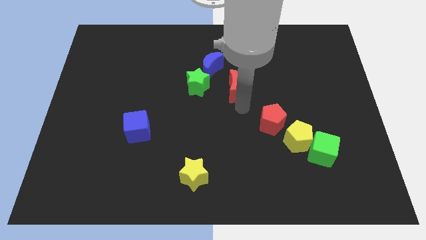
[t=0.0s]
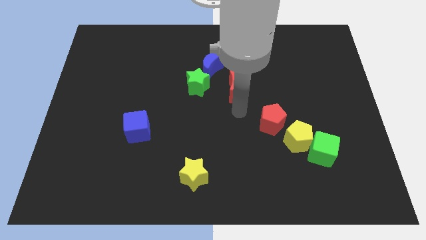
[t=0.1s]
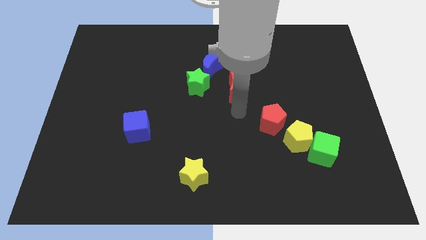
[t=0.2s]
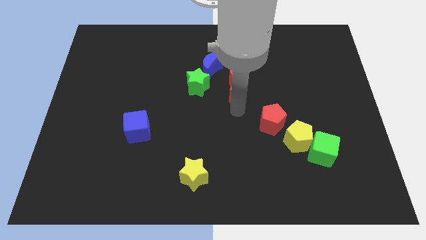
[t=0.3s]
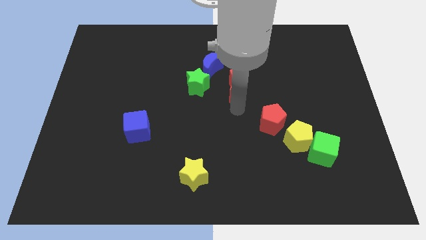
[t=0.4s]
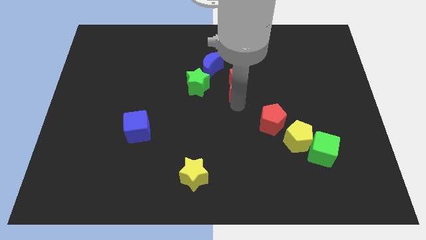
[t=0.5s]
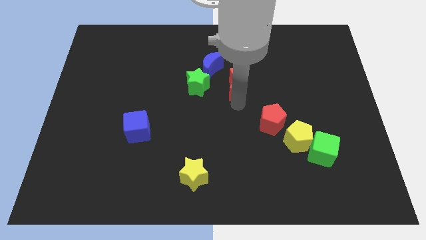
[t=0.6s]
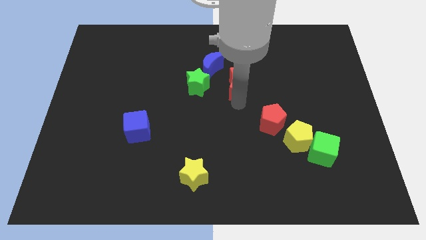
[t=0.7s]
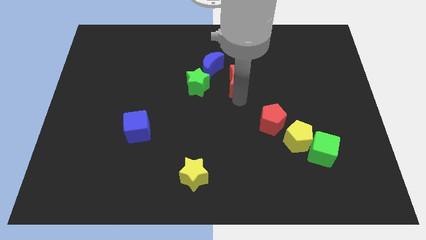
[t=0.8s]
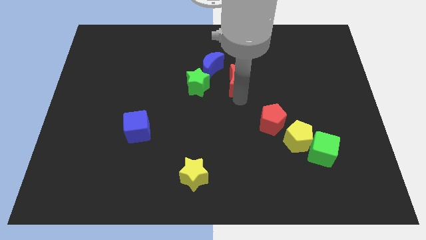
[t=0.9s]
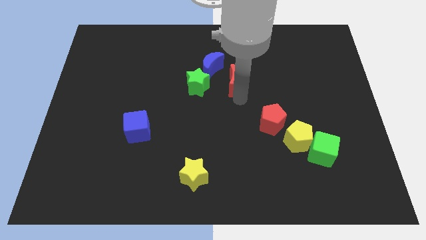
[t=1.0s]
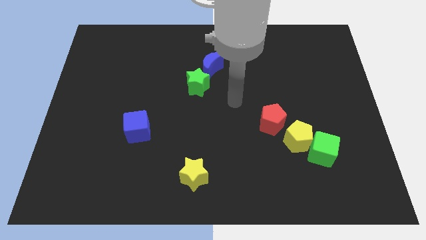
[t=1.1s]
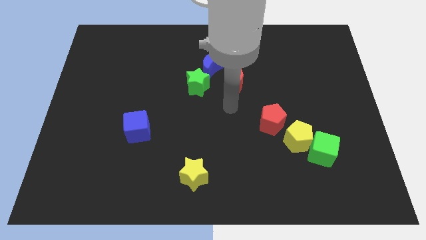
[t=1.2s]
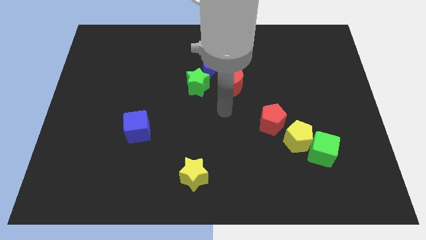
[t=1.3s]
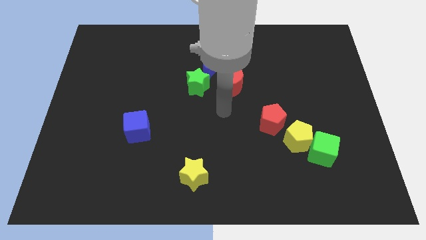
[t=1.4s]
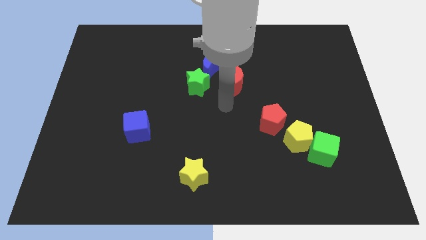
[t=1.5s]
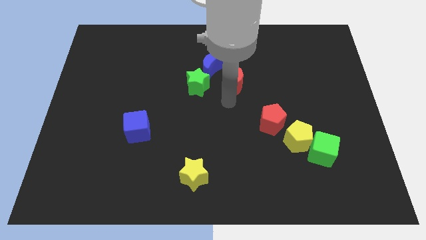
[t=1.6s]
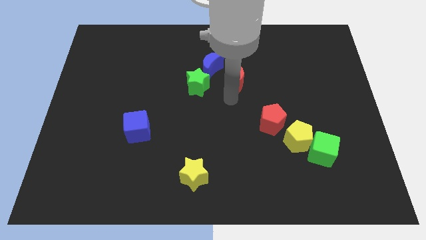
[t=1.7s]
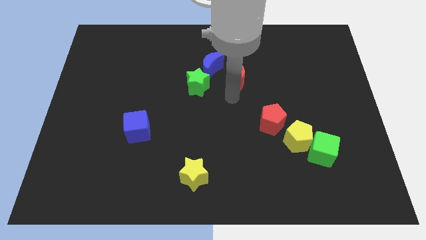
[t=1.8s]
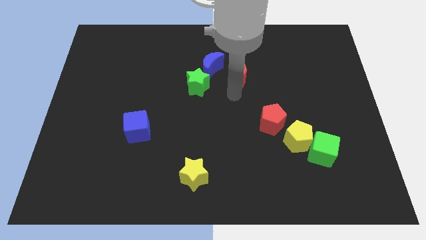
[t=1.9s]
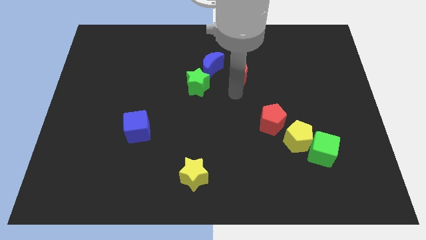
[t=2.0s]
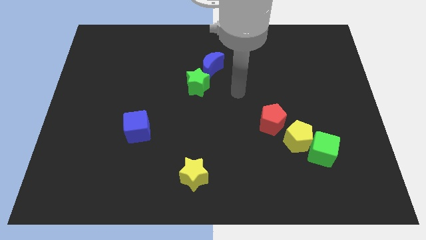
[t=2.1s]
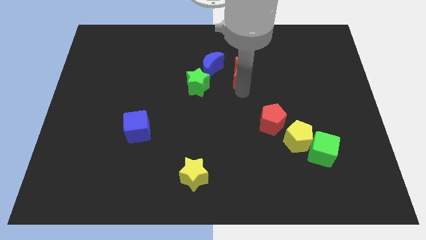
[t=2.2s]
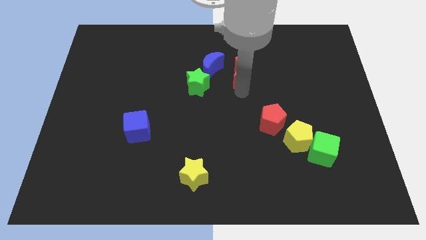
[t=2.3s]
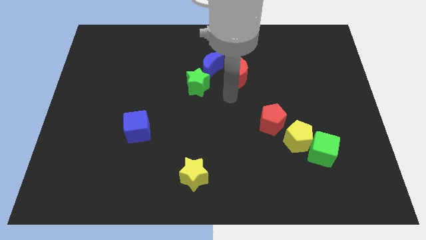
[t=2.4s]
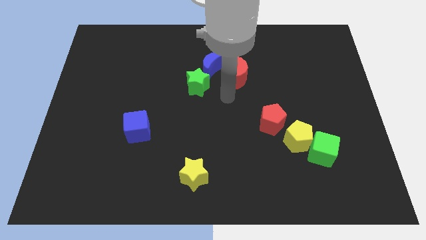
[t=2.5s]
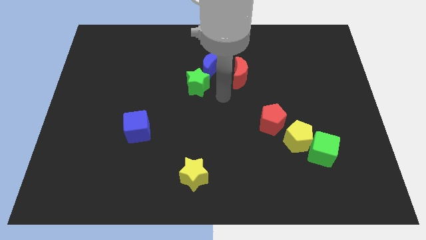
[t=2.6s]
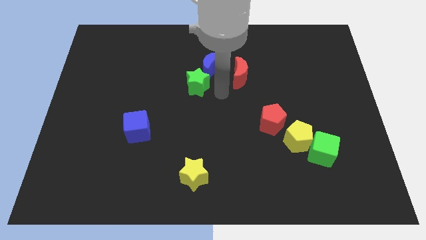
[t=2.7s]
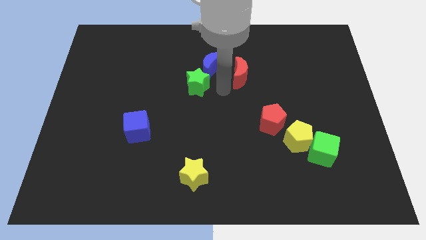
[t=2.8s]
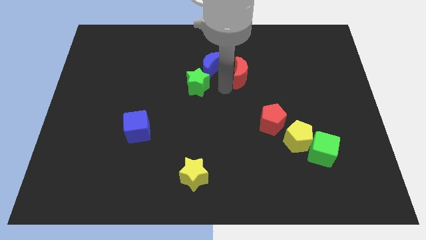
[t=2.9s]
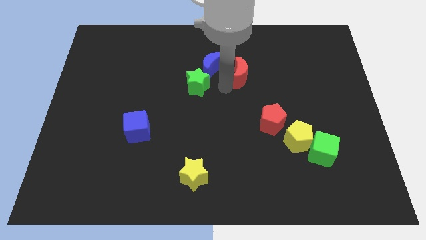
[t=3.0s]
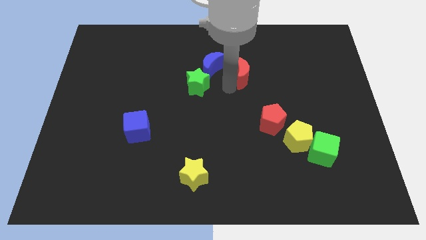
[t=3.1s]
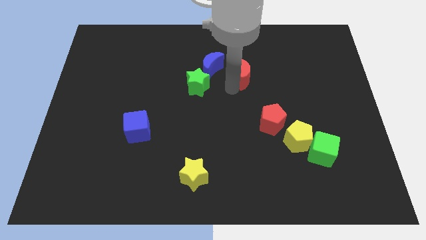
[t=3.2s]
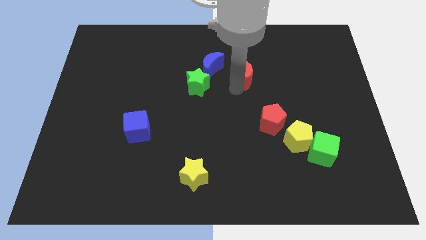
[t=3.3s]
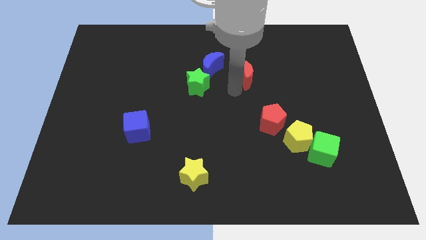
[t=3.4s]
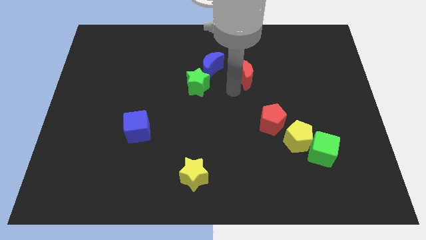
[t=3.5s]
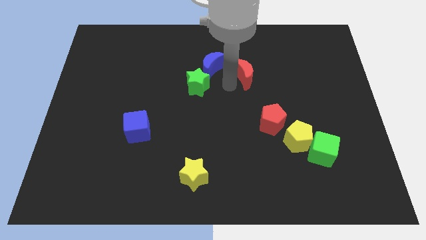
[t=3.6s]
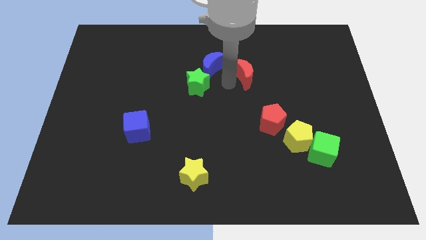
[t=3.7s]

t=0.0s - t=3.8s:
adjust the red moon at the right side of the blue moon

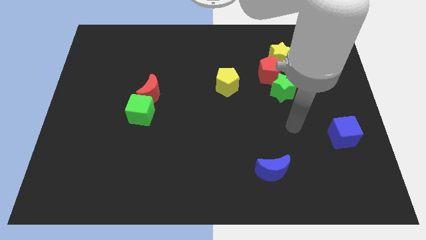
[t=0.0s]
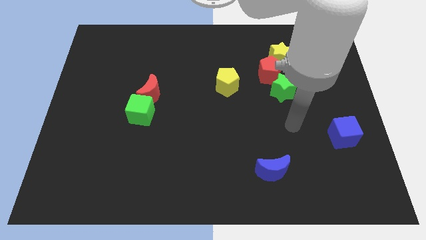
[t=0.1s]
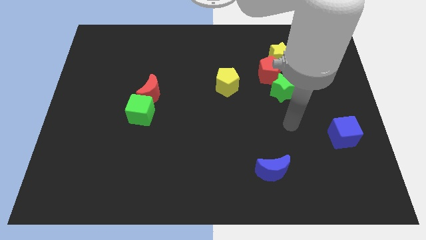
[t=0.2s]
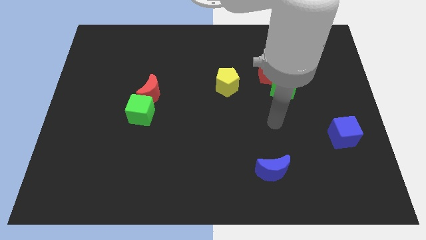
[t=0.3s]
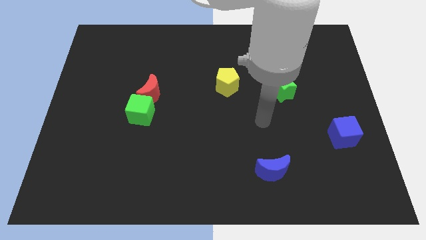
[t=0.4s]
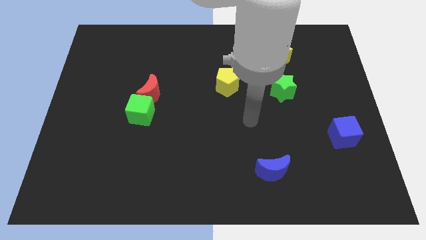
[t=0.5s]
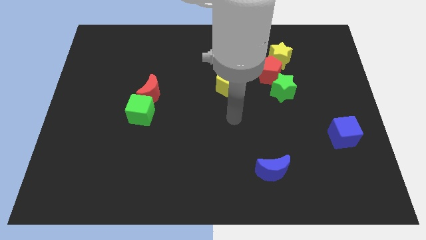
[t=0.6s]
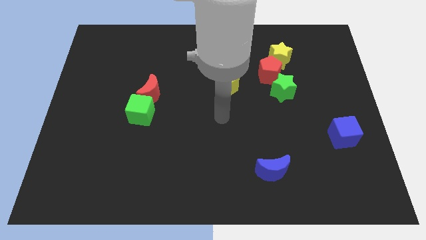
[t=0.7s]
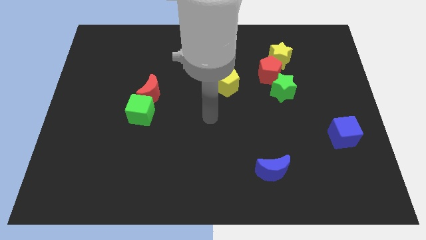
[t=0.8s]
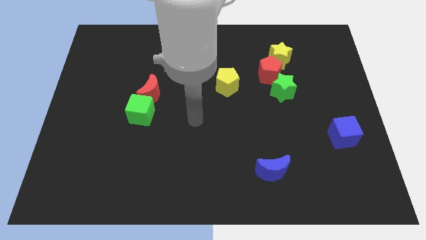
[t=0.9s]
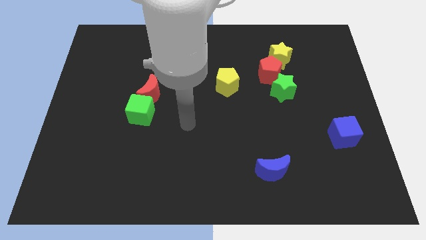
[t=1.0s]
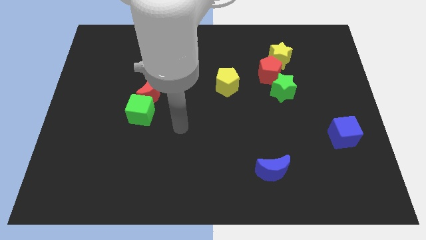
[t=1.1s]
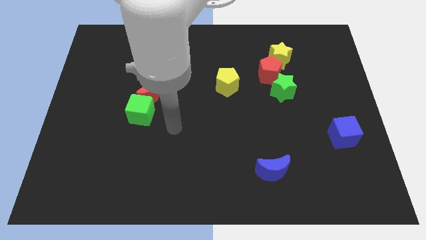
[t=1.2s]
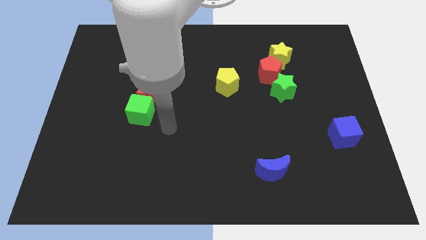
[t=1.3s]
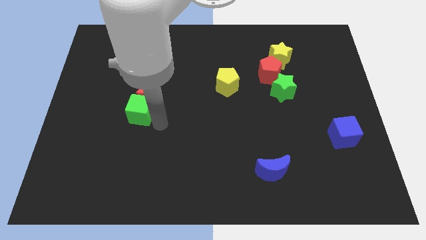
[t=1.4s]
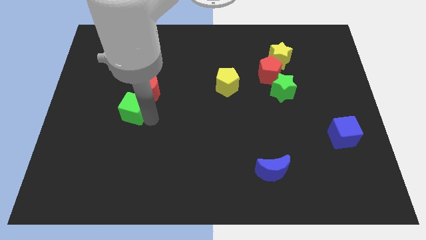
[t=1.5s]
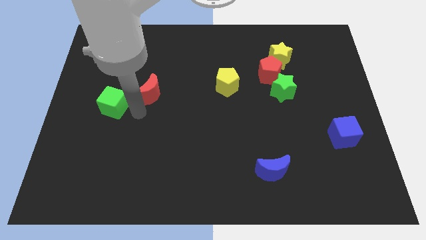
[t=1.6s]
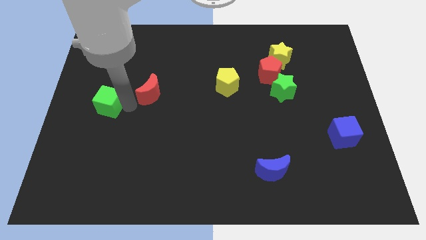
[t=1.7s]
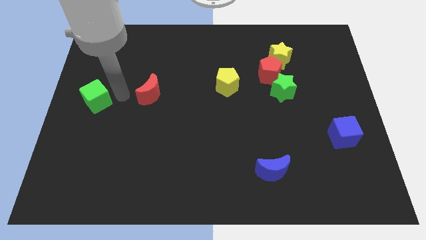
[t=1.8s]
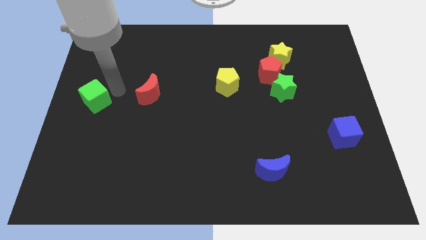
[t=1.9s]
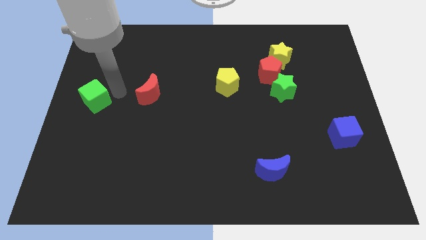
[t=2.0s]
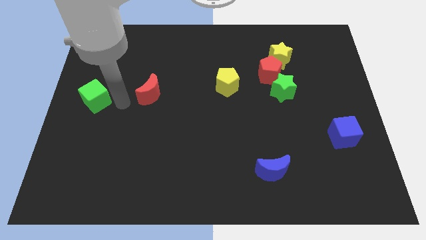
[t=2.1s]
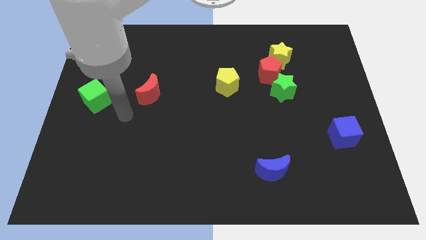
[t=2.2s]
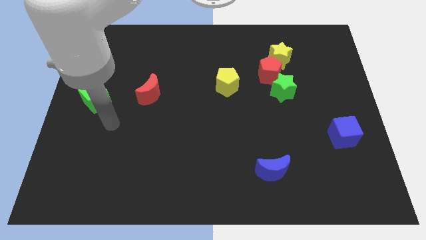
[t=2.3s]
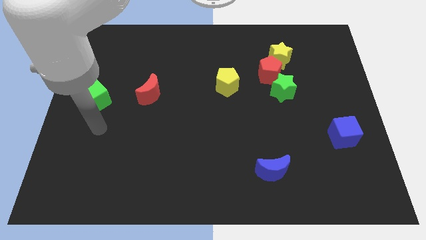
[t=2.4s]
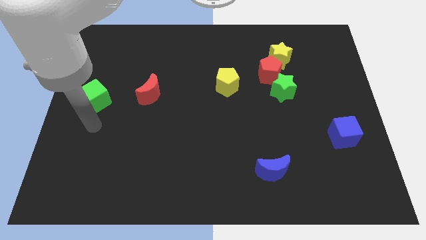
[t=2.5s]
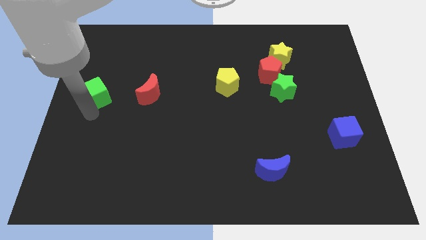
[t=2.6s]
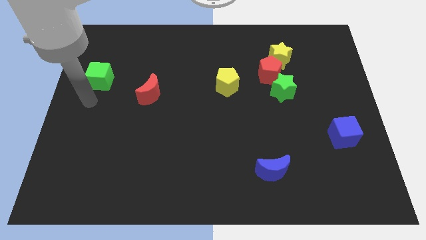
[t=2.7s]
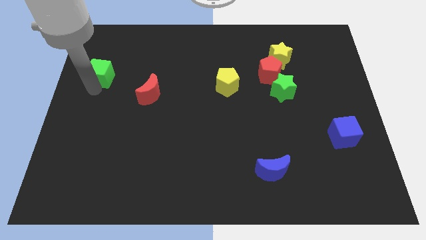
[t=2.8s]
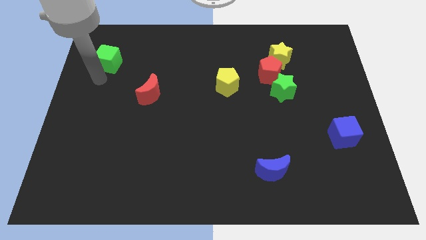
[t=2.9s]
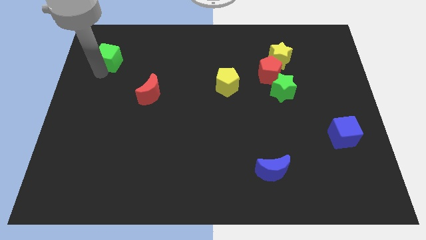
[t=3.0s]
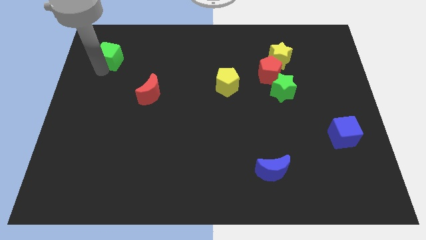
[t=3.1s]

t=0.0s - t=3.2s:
move the green cube to the top left side of the red crescent

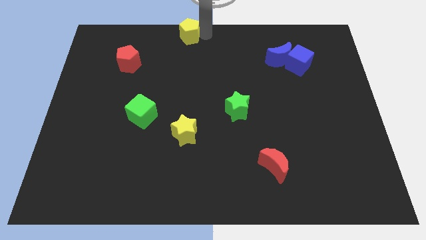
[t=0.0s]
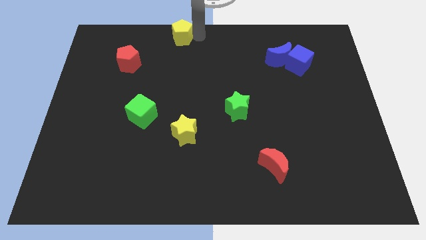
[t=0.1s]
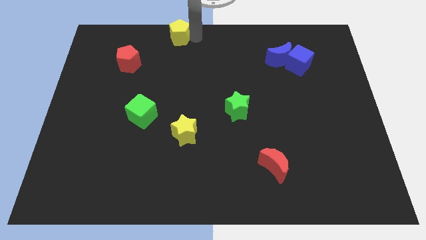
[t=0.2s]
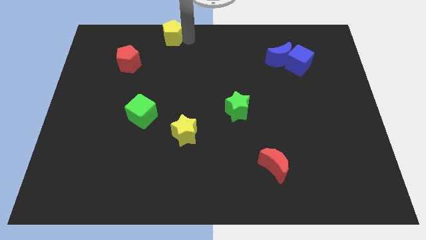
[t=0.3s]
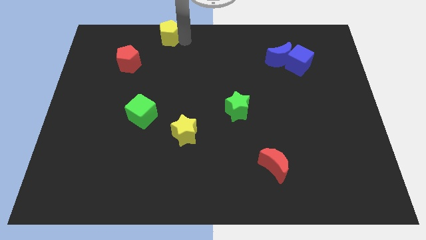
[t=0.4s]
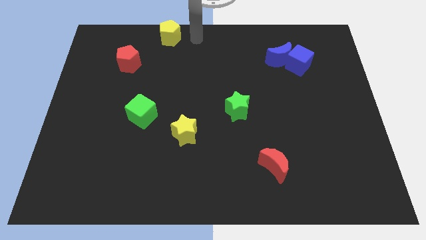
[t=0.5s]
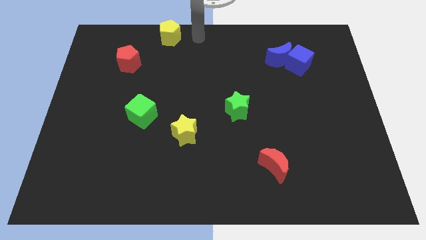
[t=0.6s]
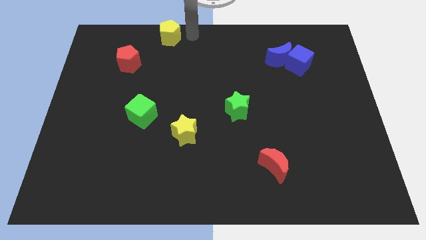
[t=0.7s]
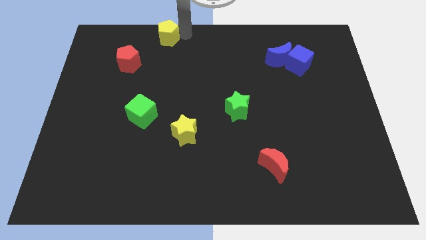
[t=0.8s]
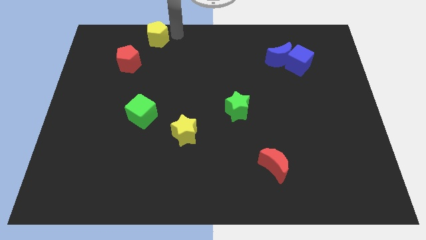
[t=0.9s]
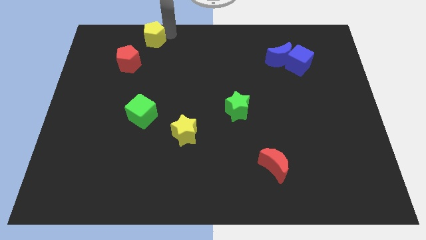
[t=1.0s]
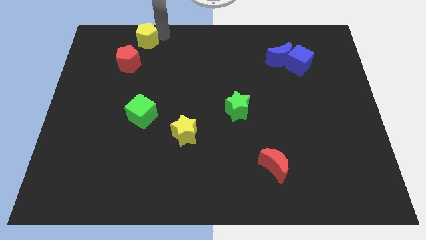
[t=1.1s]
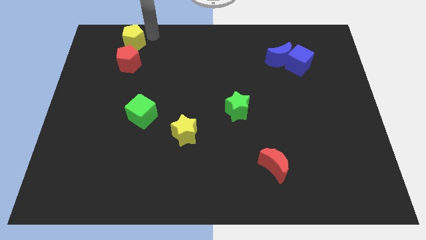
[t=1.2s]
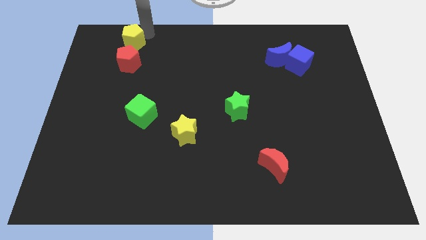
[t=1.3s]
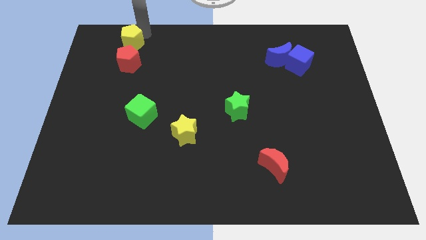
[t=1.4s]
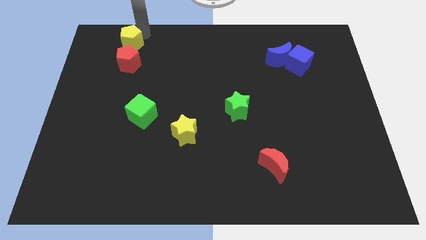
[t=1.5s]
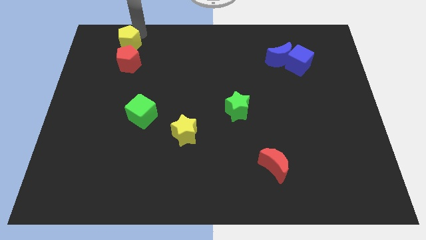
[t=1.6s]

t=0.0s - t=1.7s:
place yellow pentagon on the top of red pentagon
